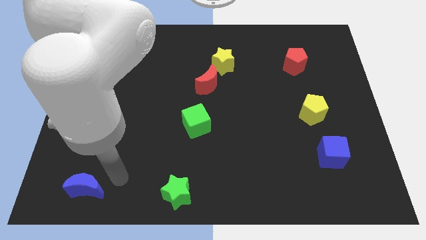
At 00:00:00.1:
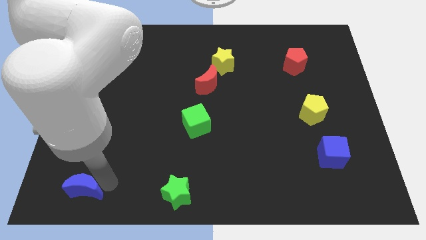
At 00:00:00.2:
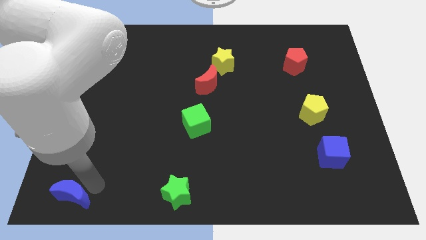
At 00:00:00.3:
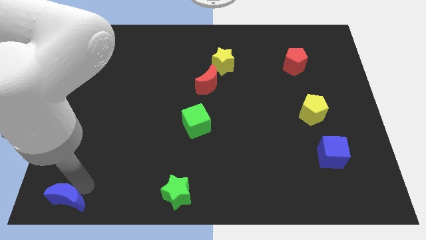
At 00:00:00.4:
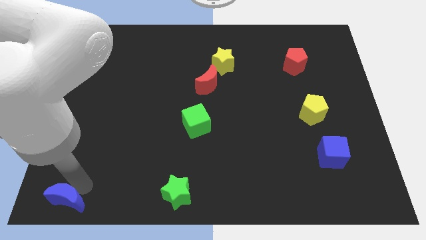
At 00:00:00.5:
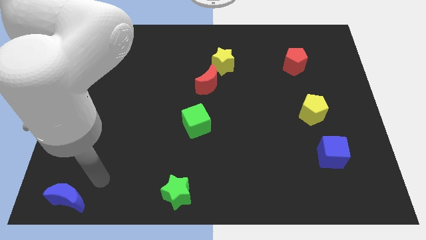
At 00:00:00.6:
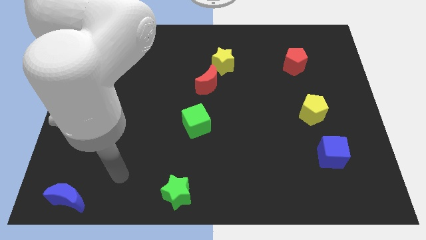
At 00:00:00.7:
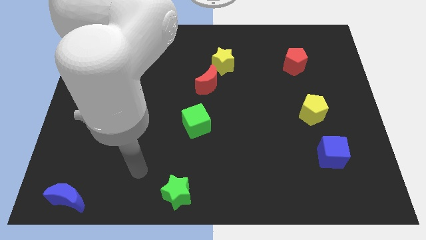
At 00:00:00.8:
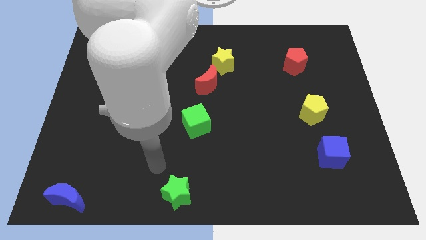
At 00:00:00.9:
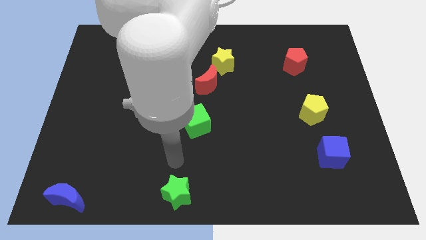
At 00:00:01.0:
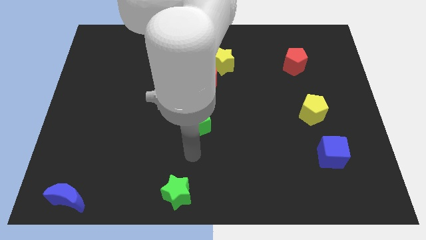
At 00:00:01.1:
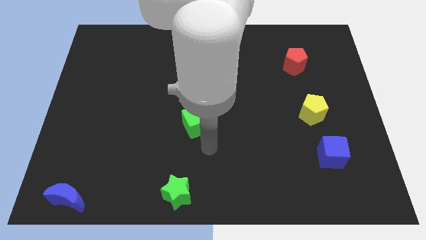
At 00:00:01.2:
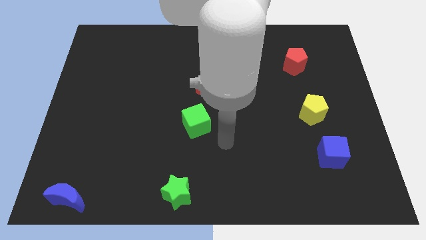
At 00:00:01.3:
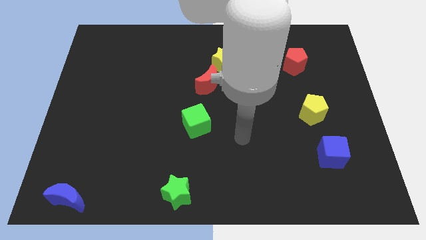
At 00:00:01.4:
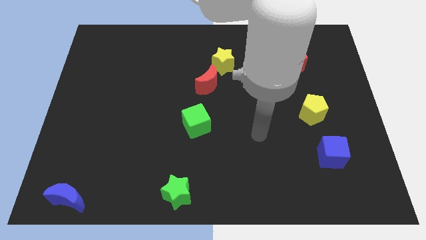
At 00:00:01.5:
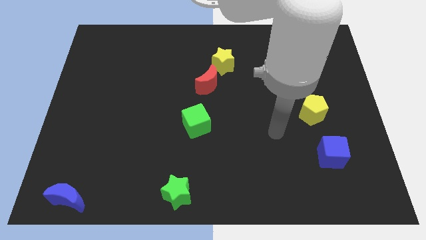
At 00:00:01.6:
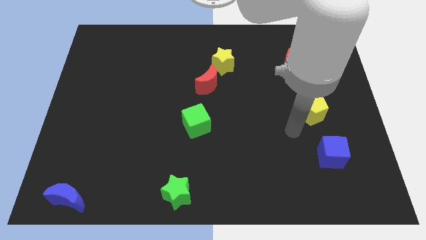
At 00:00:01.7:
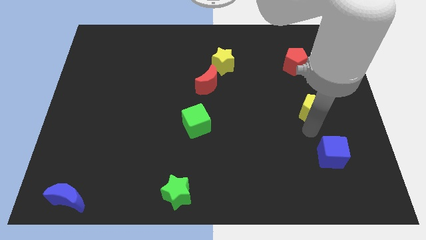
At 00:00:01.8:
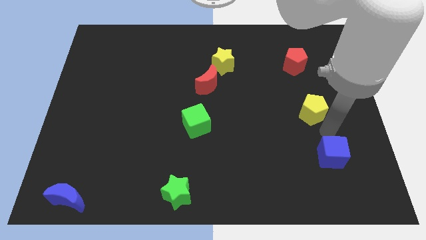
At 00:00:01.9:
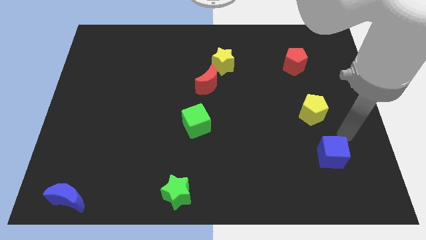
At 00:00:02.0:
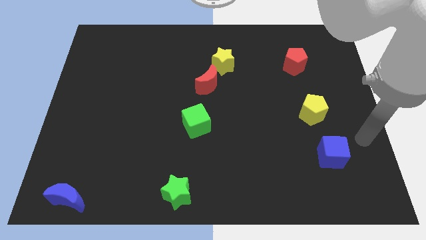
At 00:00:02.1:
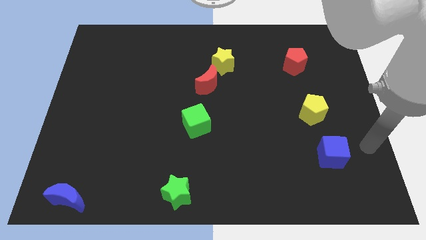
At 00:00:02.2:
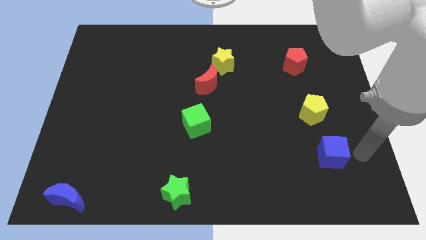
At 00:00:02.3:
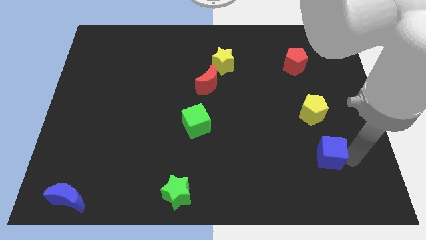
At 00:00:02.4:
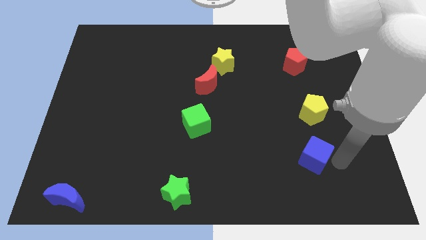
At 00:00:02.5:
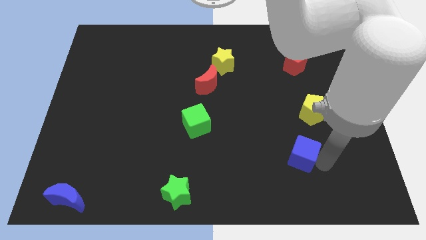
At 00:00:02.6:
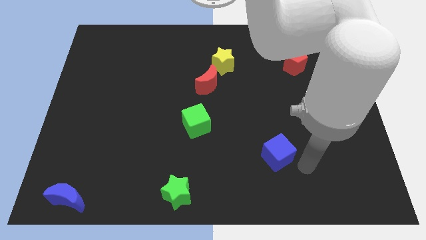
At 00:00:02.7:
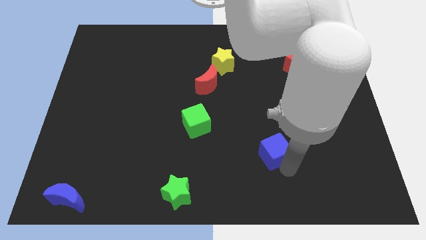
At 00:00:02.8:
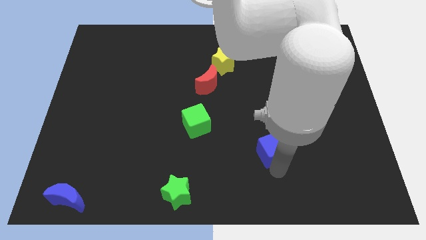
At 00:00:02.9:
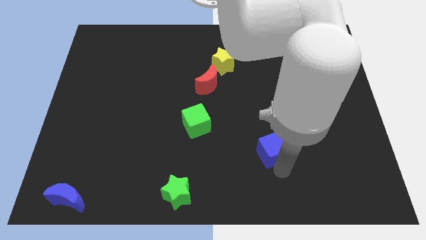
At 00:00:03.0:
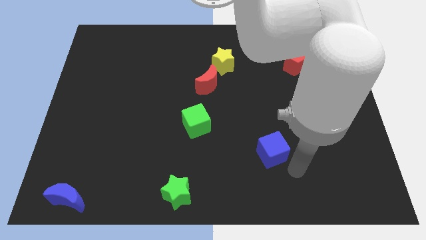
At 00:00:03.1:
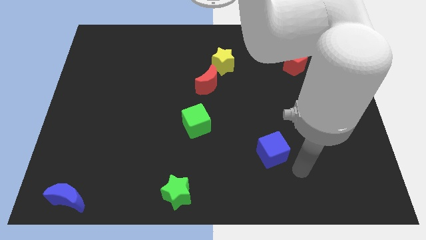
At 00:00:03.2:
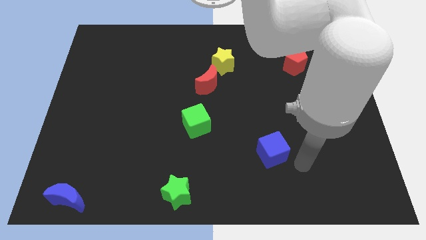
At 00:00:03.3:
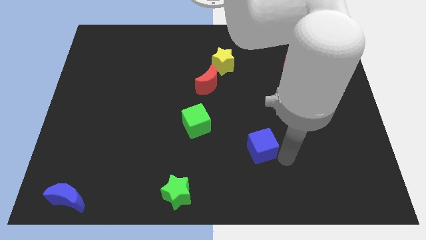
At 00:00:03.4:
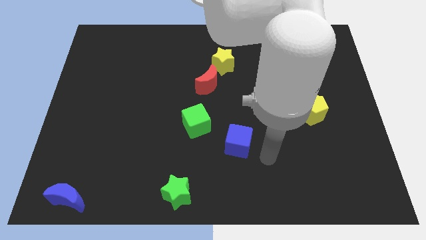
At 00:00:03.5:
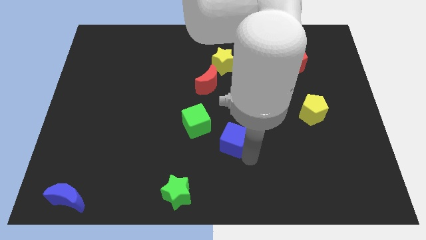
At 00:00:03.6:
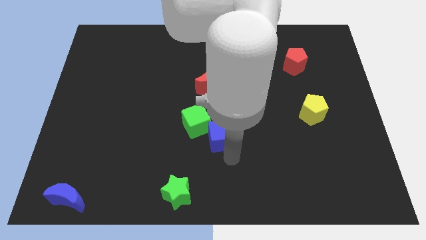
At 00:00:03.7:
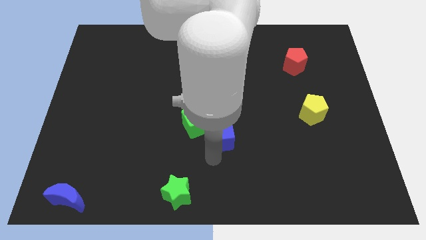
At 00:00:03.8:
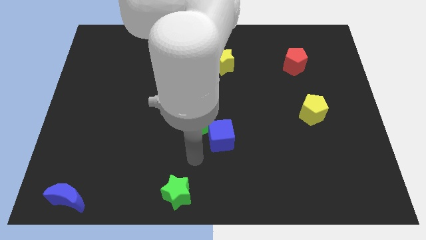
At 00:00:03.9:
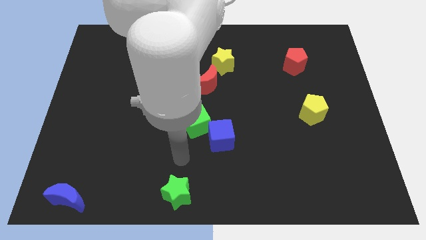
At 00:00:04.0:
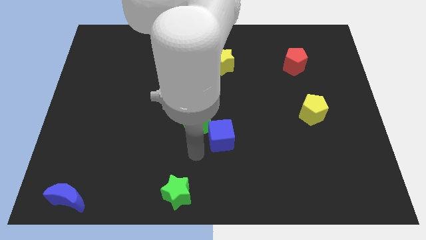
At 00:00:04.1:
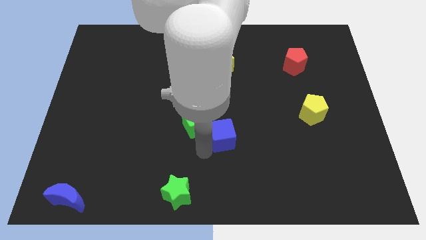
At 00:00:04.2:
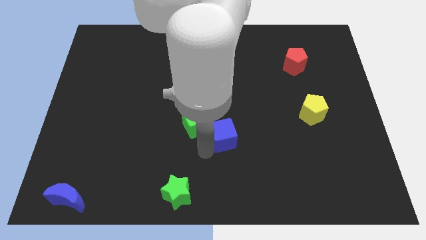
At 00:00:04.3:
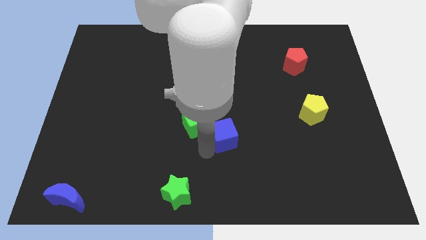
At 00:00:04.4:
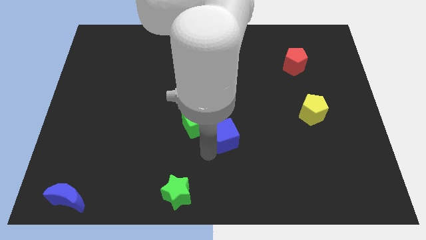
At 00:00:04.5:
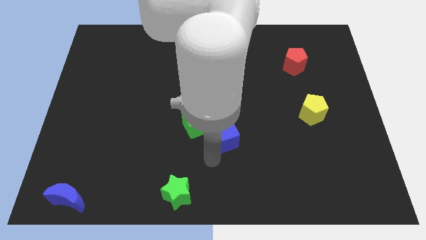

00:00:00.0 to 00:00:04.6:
move the blue cube close to the green cube

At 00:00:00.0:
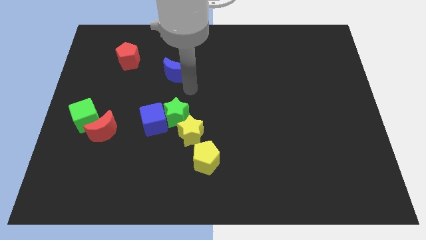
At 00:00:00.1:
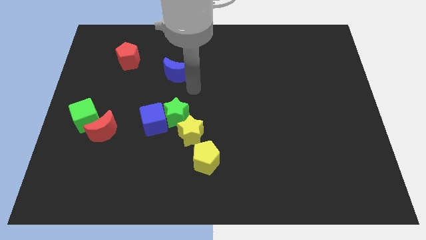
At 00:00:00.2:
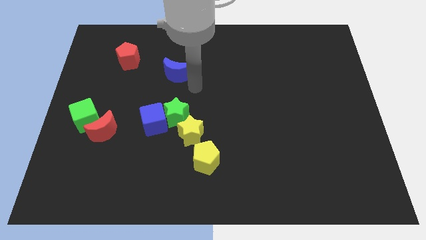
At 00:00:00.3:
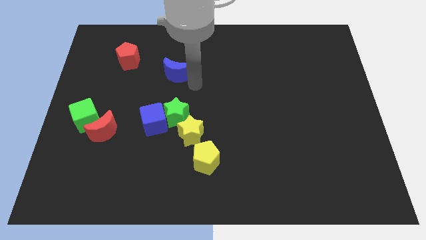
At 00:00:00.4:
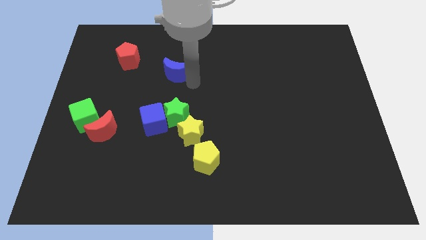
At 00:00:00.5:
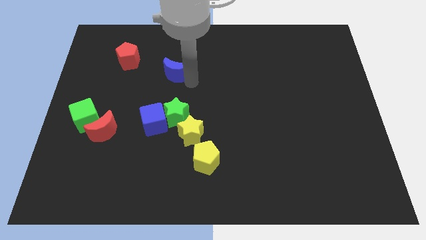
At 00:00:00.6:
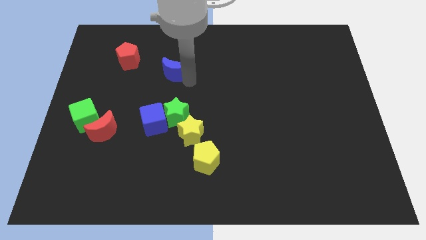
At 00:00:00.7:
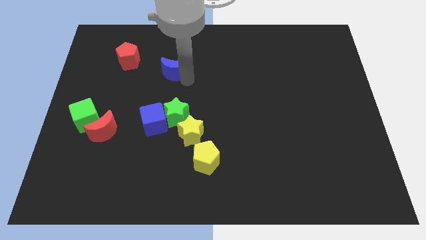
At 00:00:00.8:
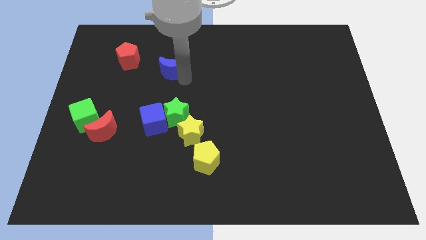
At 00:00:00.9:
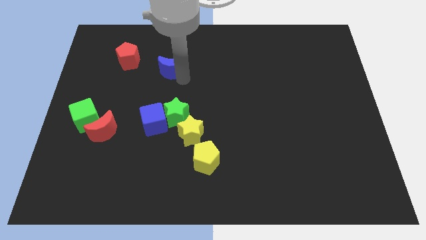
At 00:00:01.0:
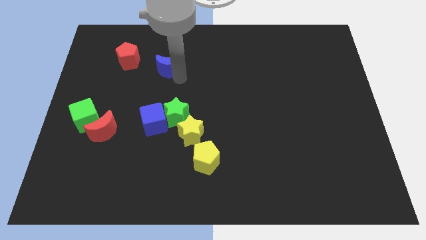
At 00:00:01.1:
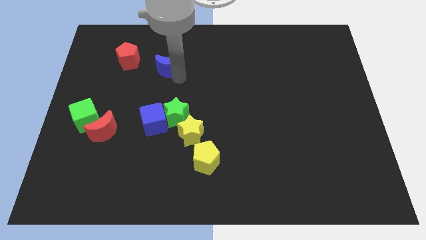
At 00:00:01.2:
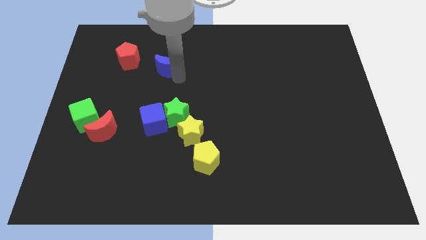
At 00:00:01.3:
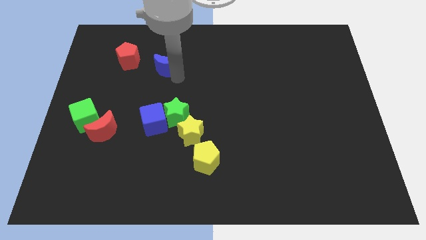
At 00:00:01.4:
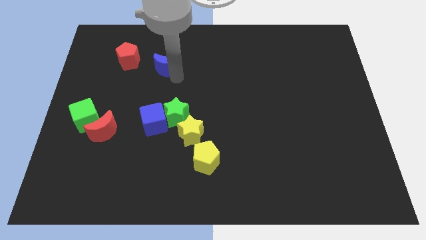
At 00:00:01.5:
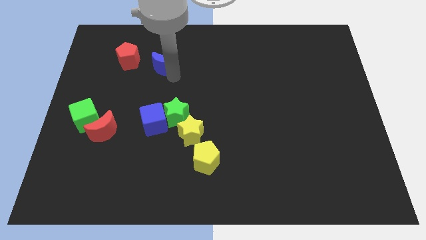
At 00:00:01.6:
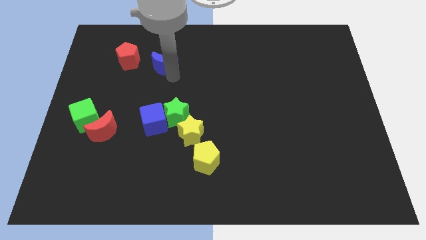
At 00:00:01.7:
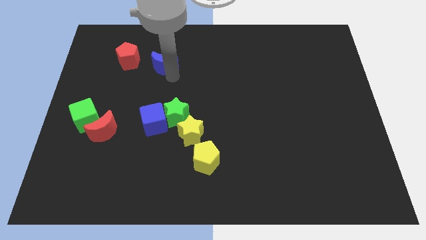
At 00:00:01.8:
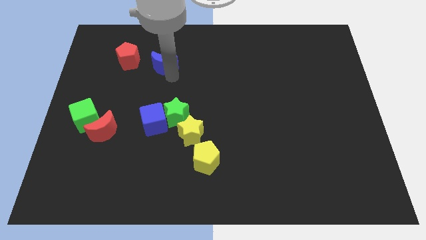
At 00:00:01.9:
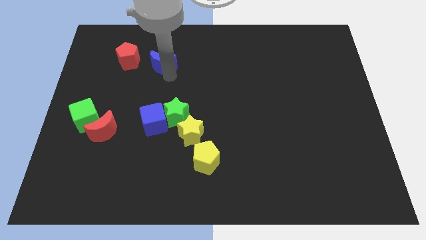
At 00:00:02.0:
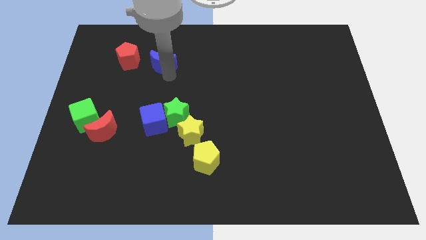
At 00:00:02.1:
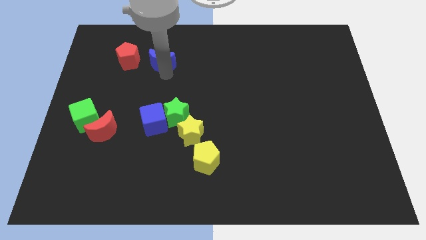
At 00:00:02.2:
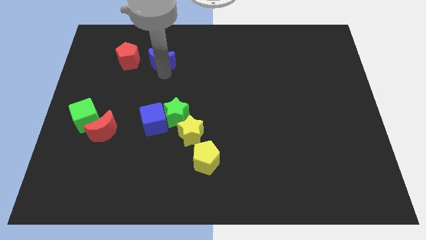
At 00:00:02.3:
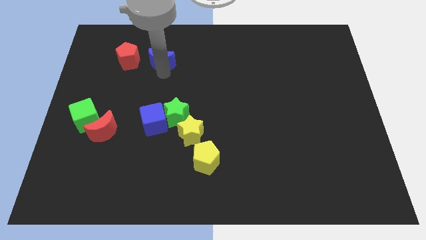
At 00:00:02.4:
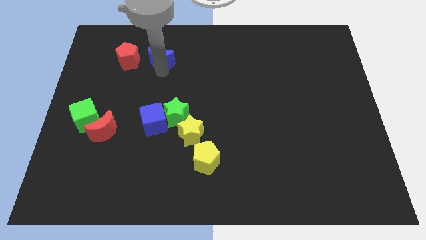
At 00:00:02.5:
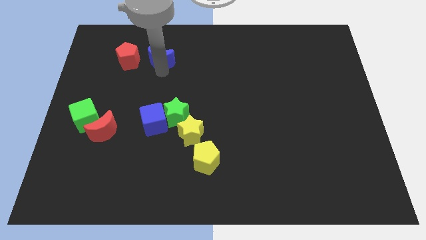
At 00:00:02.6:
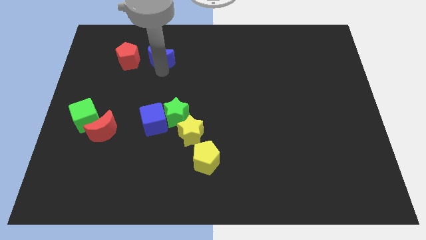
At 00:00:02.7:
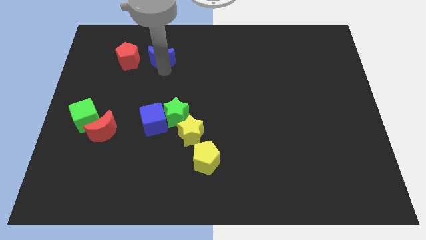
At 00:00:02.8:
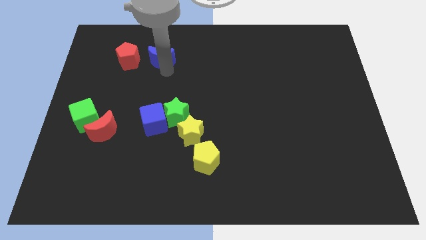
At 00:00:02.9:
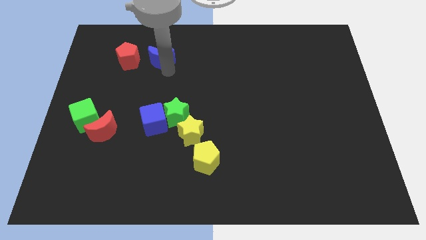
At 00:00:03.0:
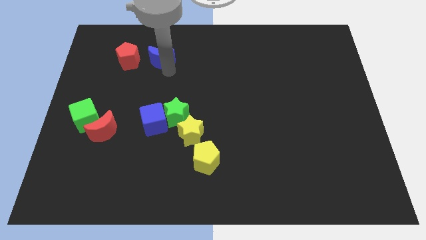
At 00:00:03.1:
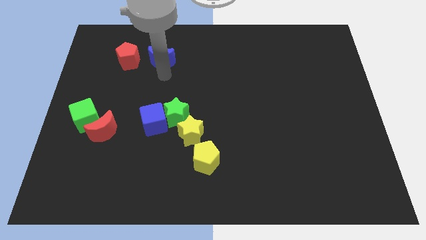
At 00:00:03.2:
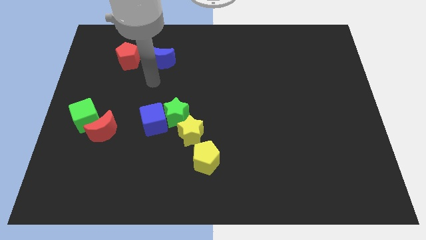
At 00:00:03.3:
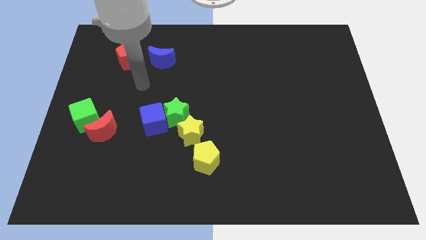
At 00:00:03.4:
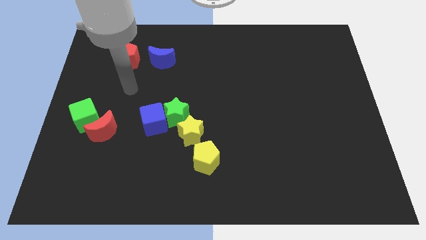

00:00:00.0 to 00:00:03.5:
put the blue crescent to the right of the red pentagon

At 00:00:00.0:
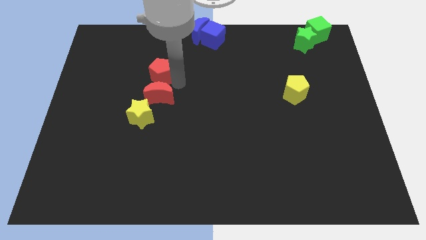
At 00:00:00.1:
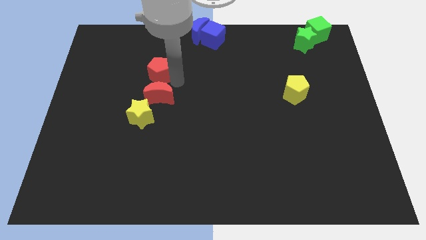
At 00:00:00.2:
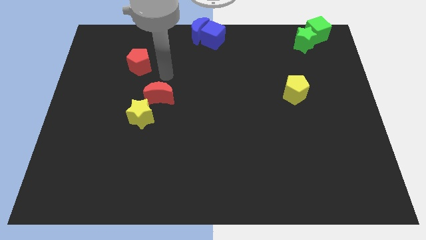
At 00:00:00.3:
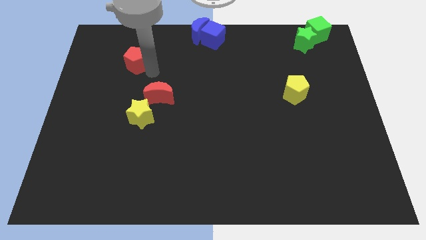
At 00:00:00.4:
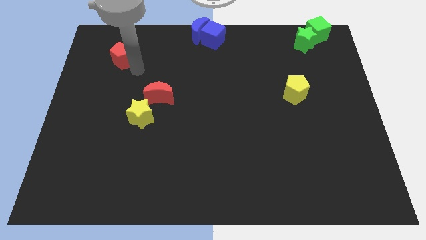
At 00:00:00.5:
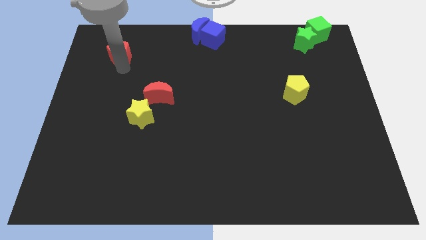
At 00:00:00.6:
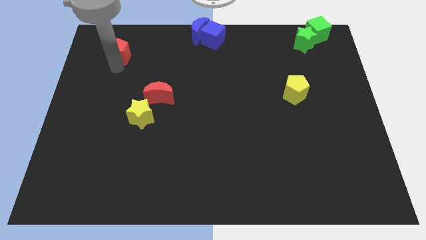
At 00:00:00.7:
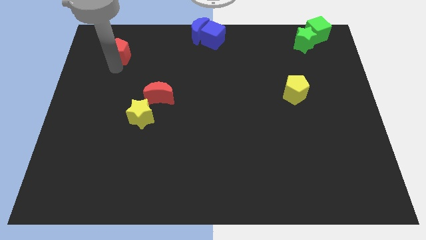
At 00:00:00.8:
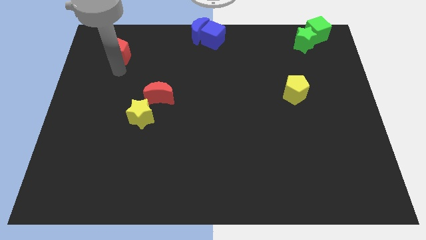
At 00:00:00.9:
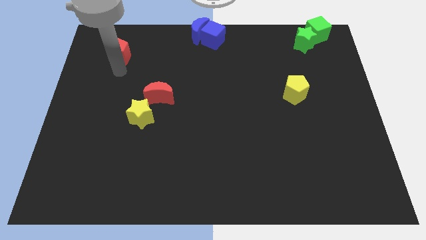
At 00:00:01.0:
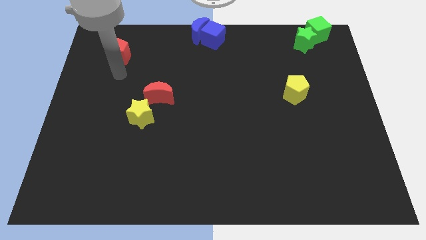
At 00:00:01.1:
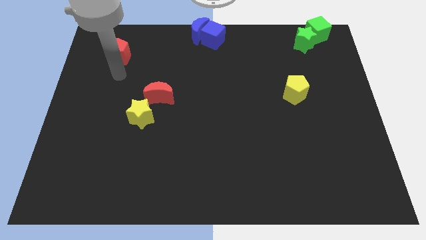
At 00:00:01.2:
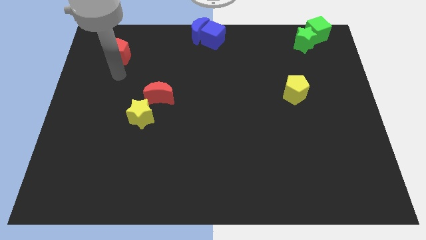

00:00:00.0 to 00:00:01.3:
place the red pentagon diagonally top left to the red moon
